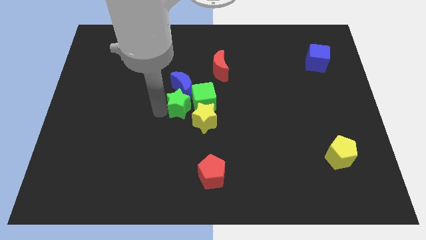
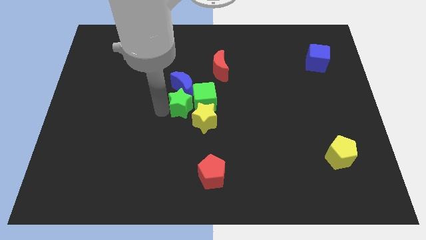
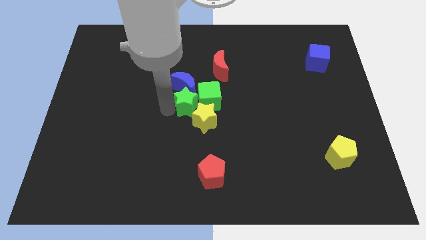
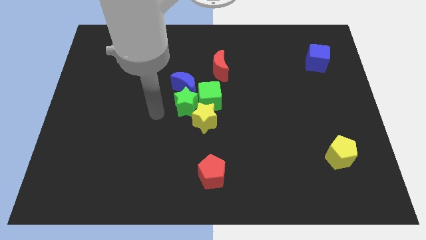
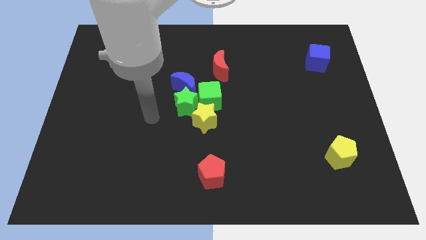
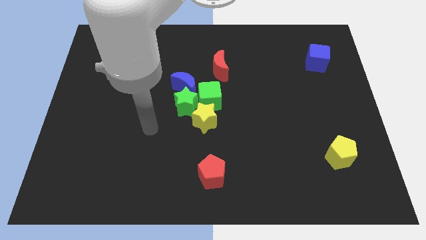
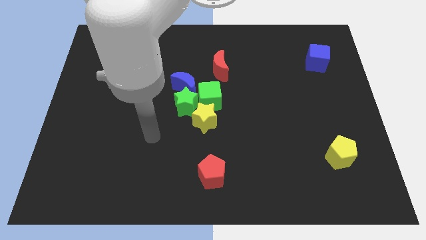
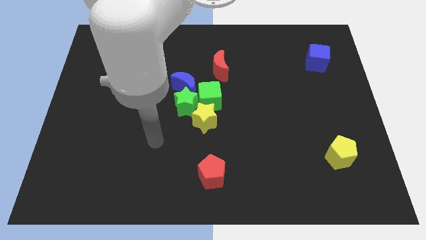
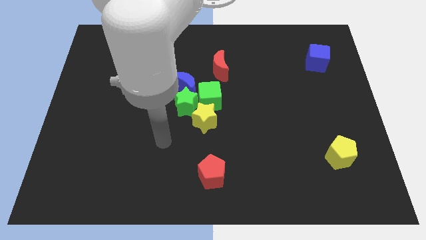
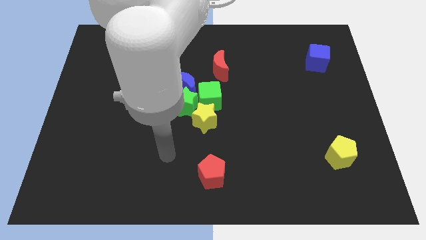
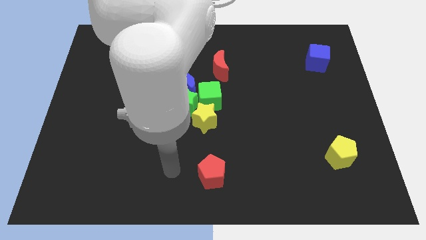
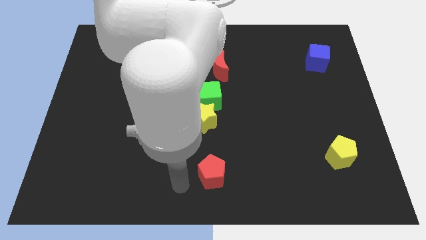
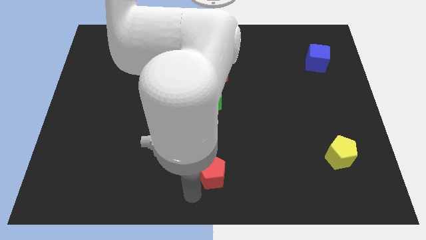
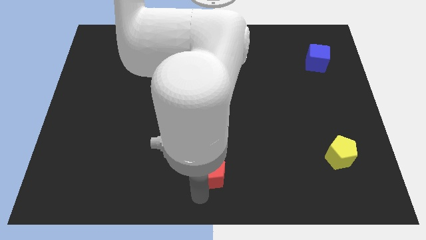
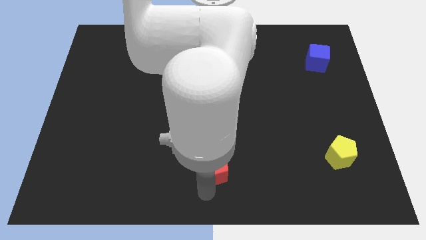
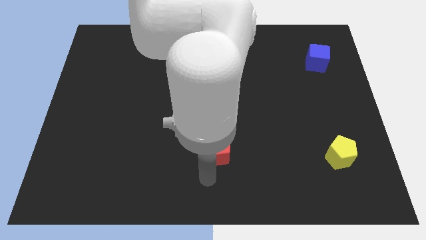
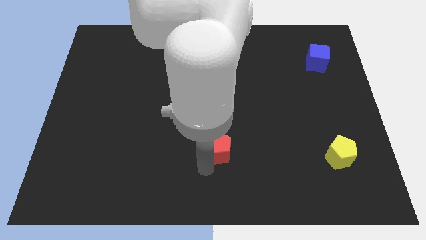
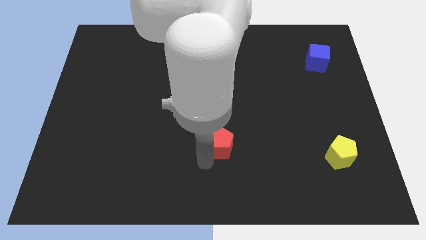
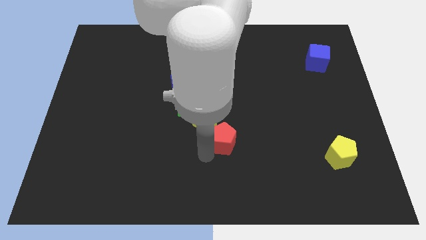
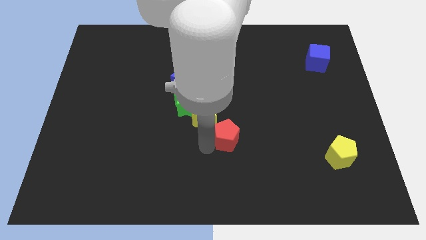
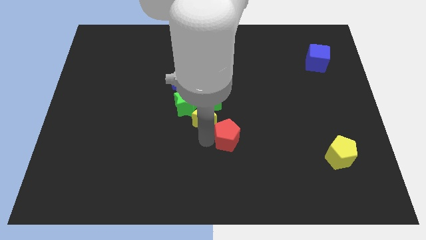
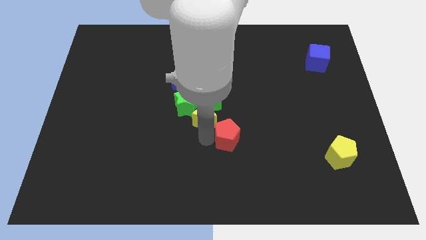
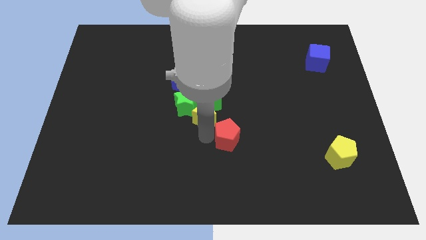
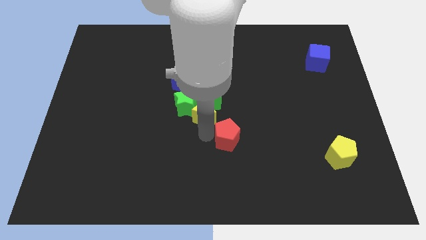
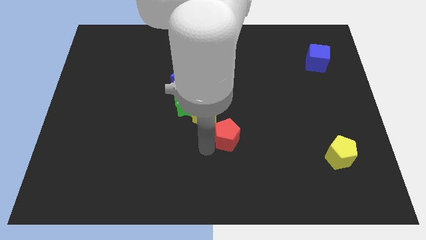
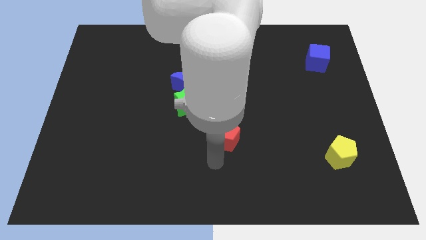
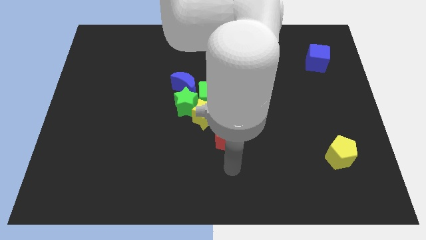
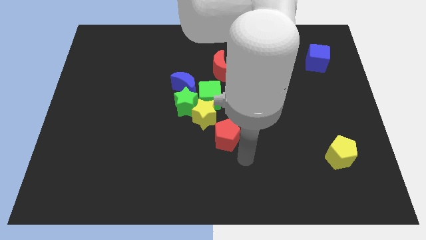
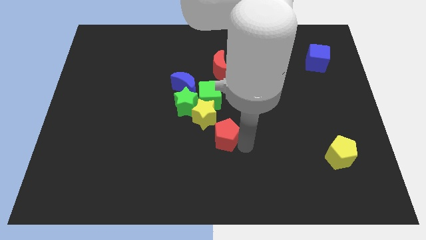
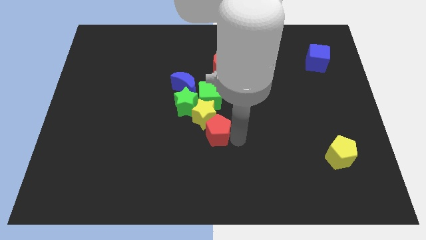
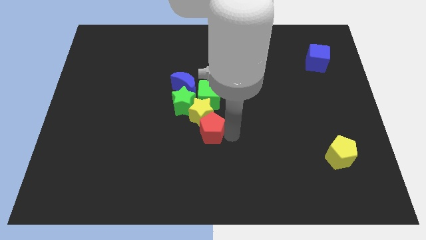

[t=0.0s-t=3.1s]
move the red pentagon towards the center

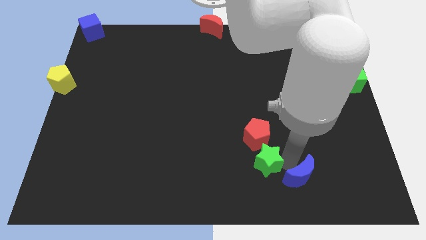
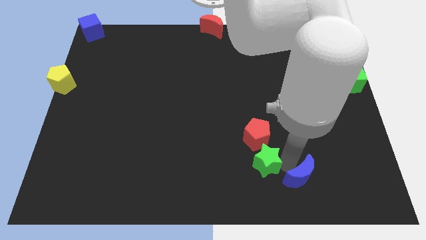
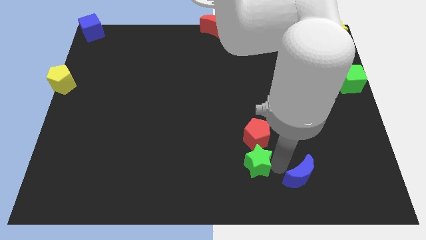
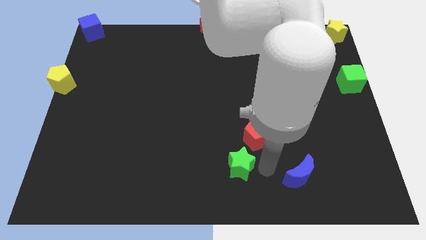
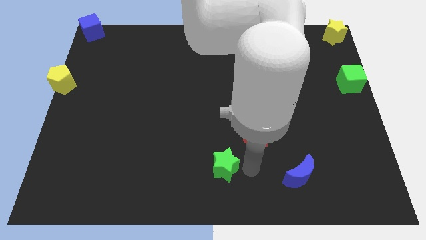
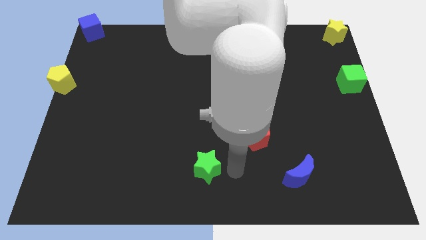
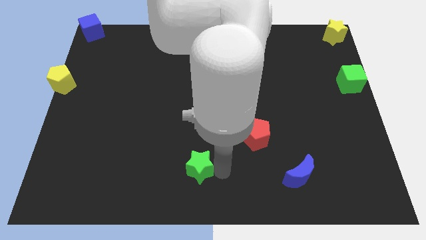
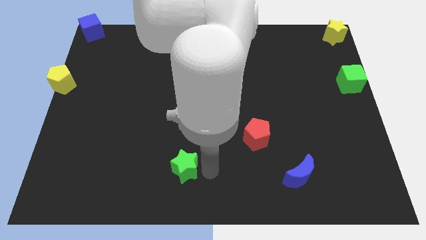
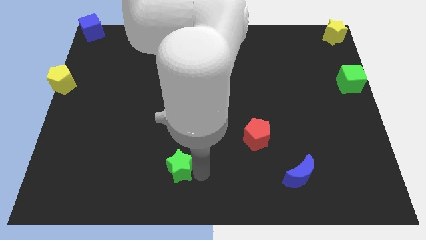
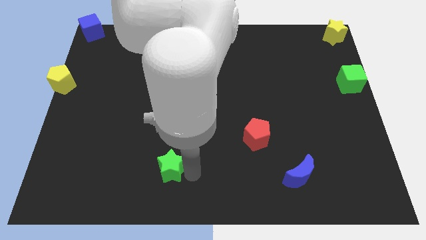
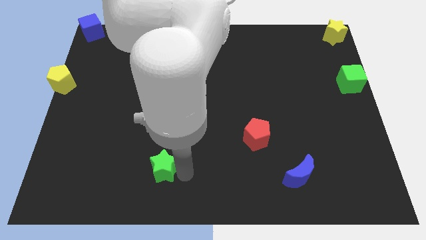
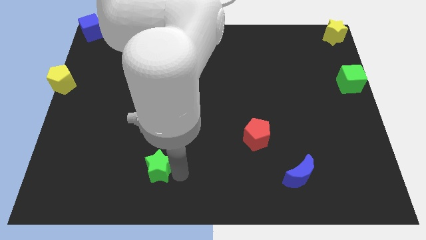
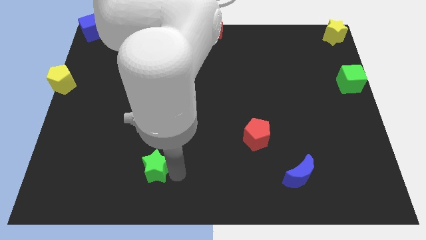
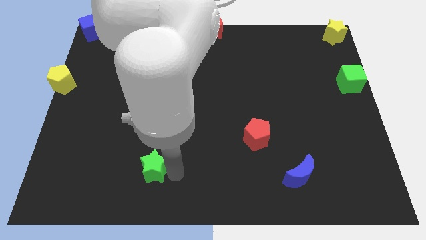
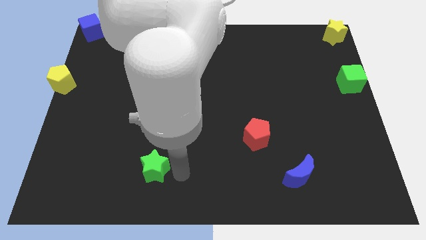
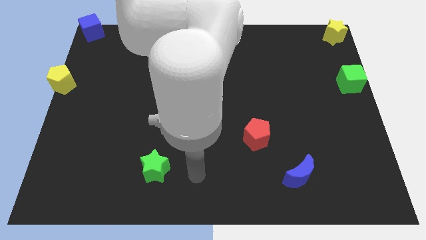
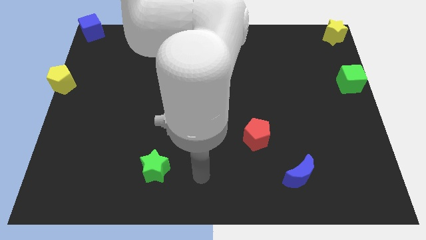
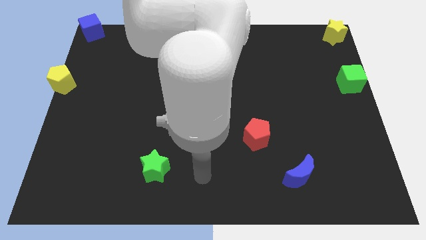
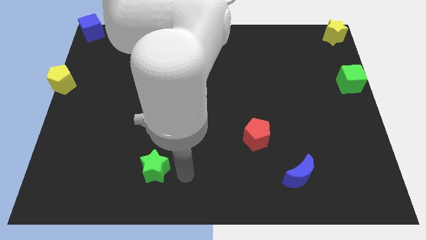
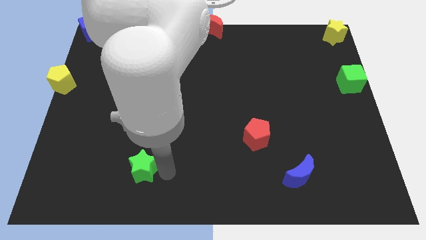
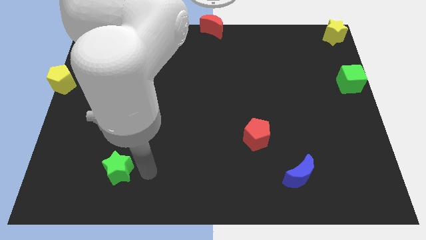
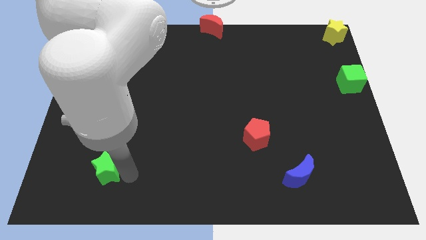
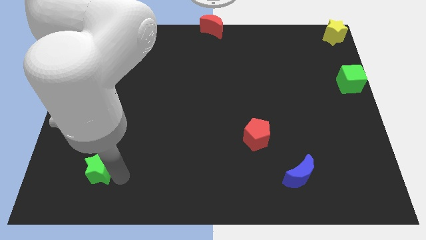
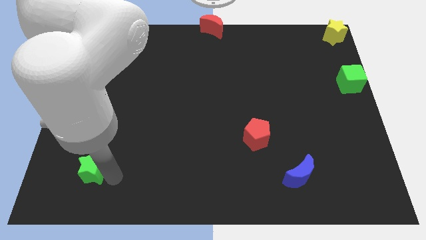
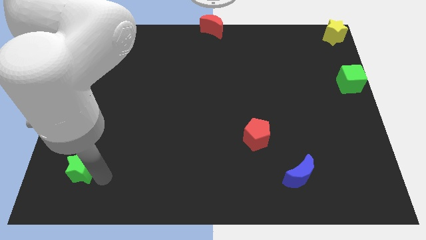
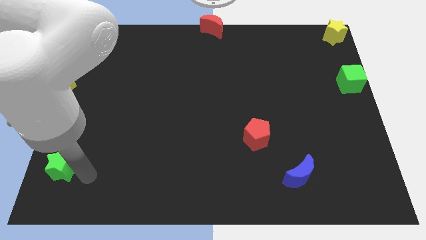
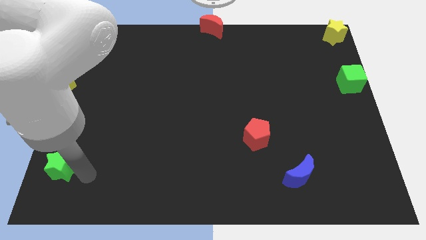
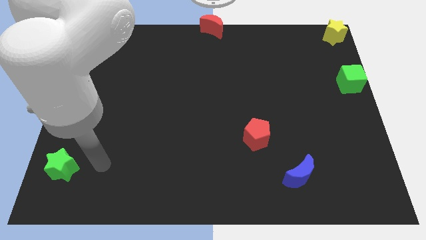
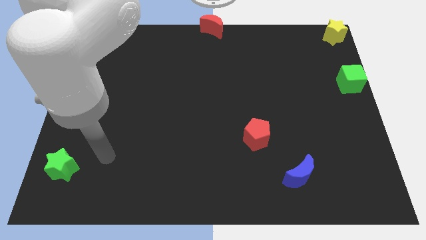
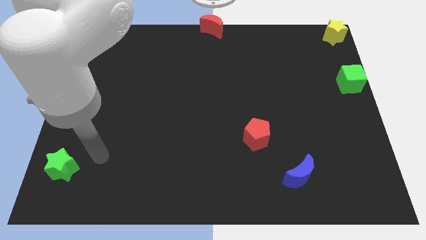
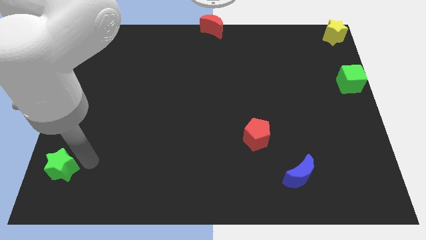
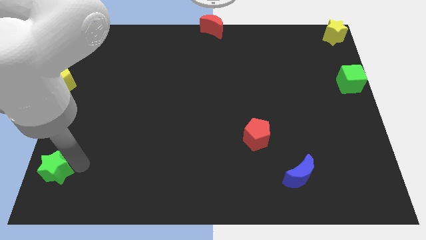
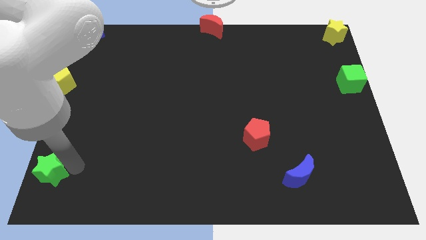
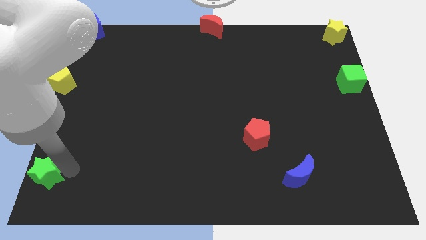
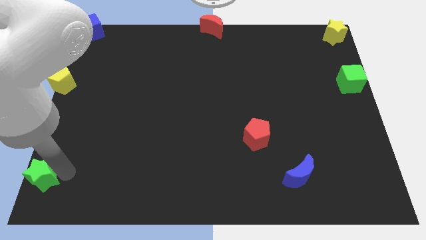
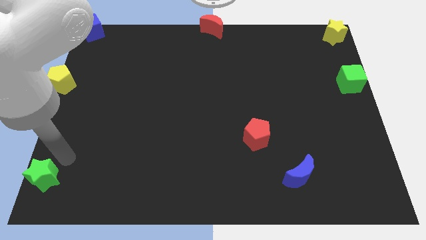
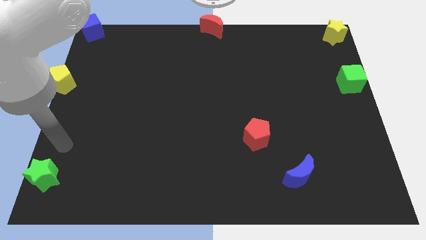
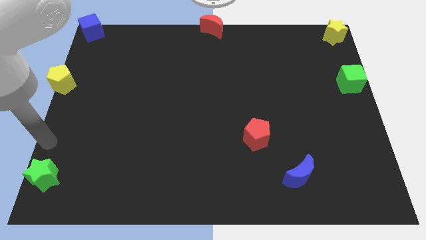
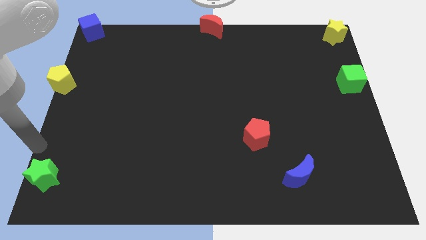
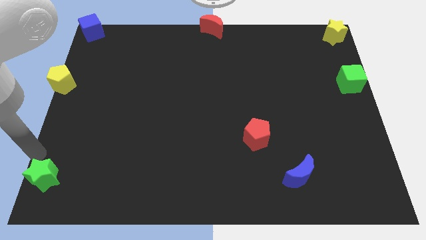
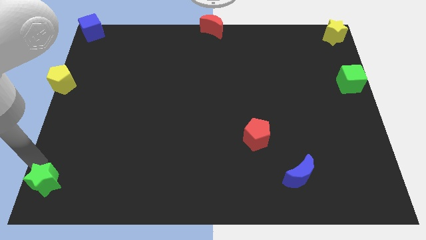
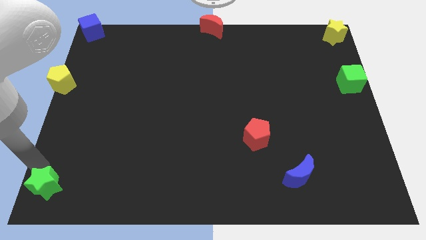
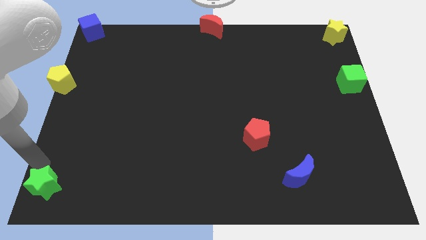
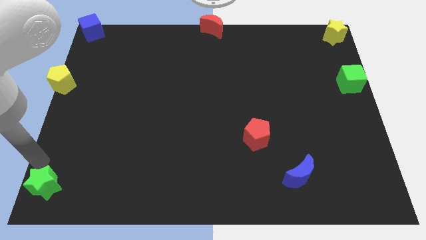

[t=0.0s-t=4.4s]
move the green star to the bottom left corner

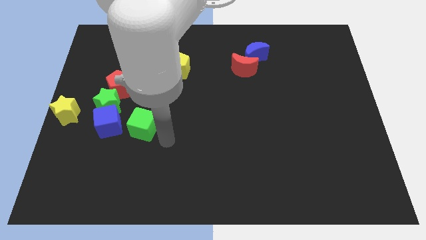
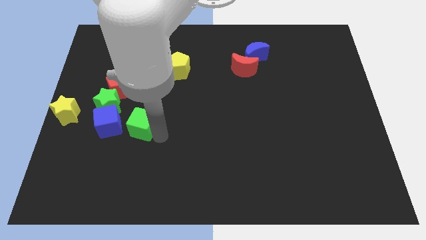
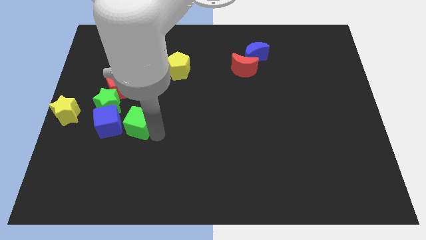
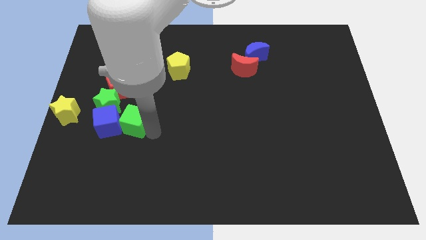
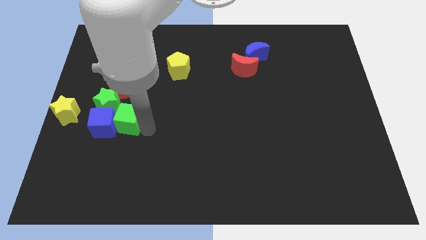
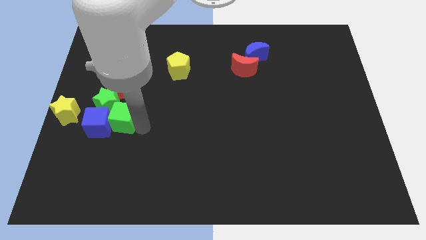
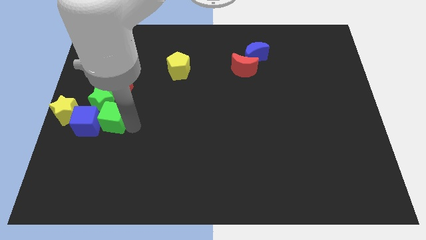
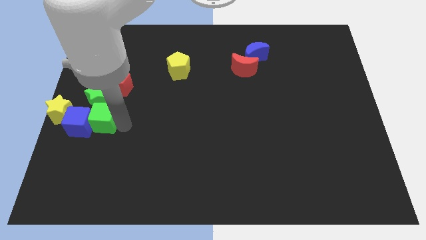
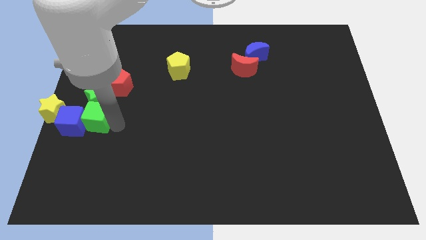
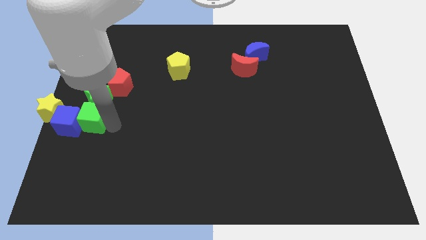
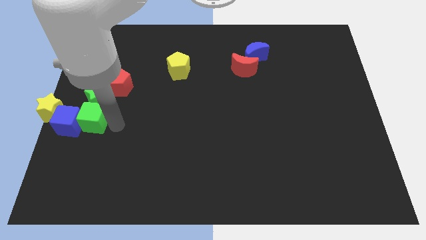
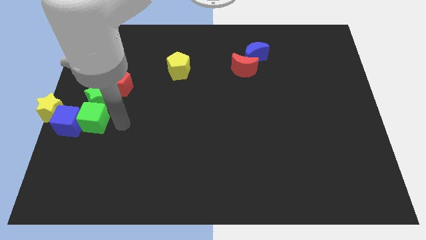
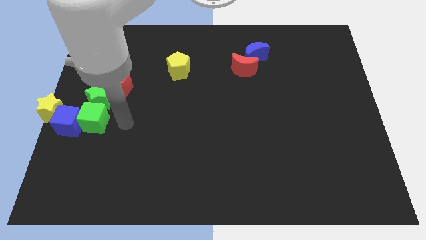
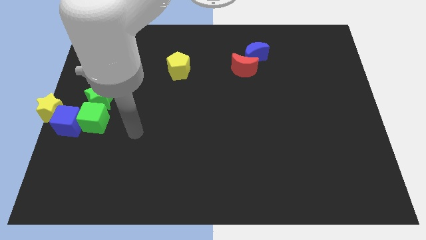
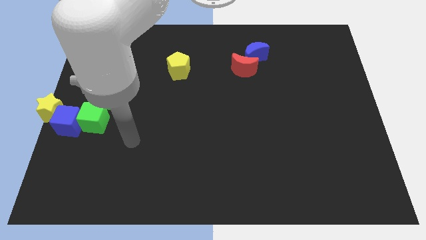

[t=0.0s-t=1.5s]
slide the blue cube along with the green cube into the yellow star

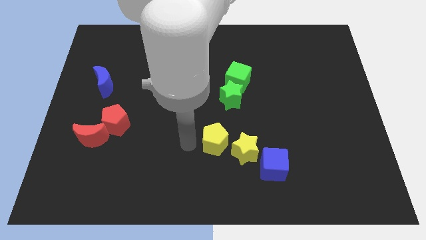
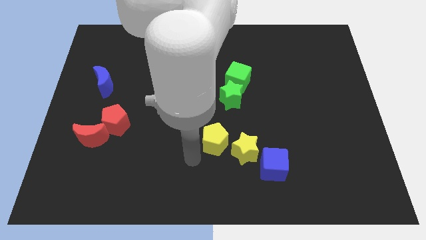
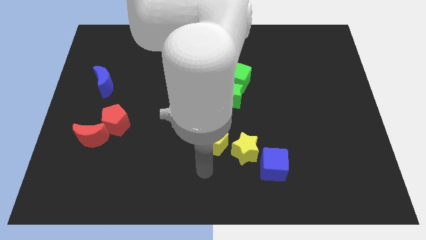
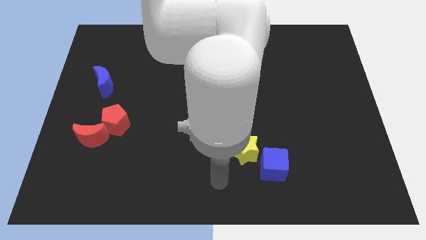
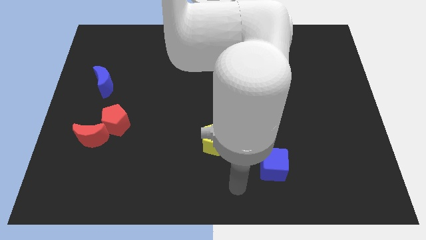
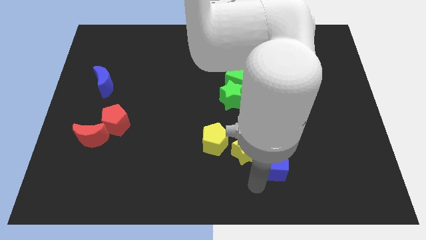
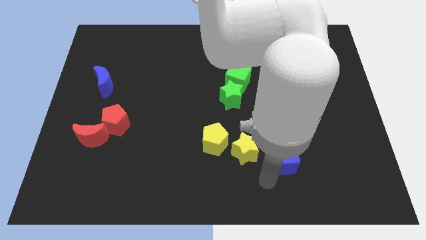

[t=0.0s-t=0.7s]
touch the blue cube with your arm
